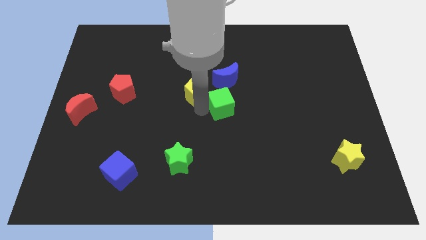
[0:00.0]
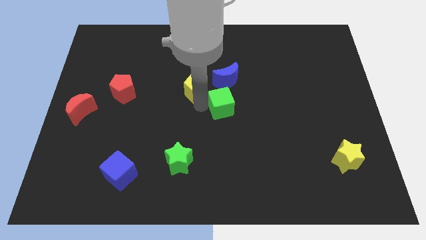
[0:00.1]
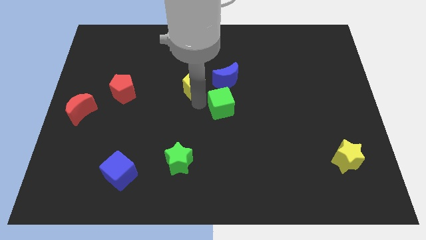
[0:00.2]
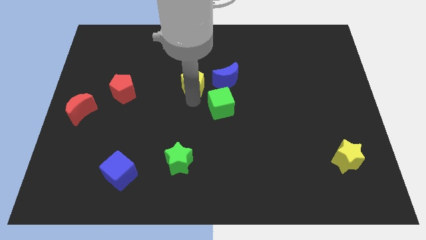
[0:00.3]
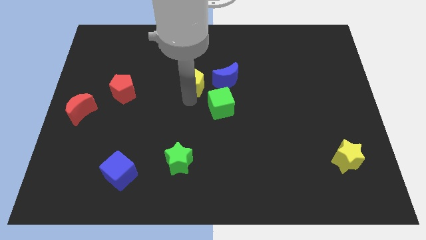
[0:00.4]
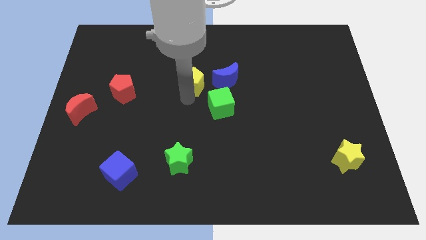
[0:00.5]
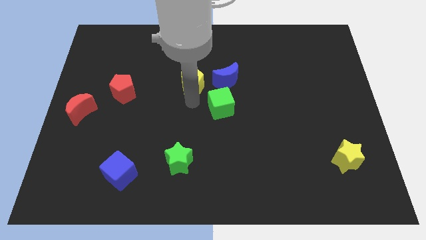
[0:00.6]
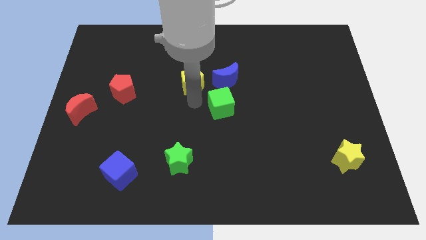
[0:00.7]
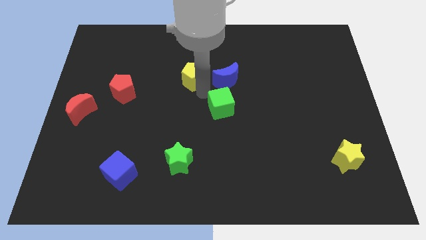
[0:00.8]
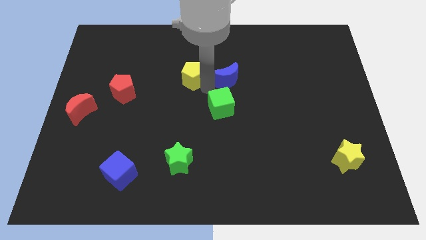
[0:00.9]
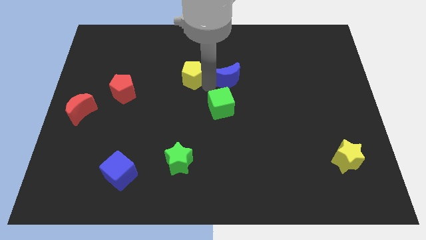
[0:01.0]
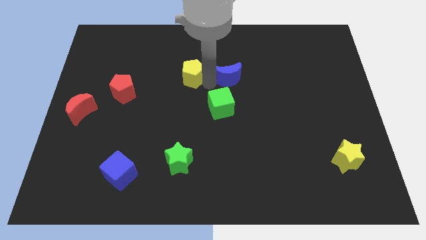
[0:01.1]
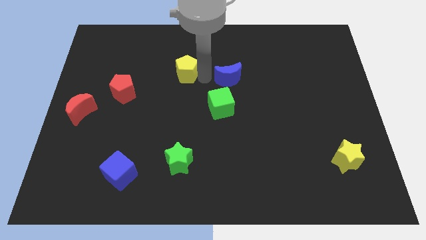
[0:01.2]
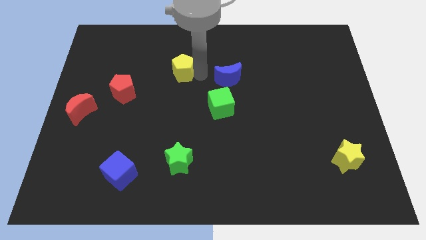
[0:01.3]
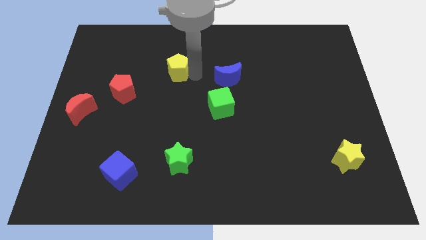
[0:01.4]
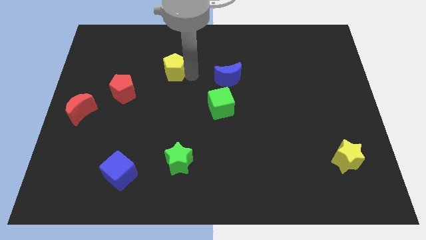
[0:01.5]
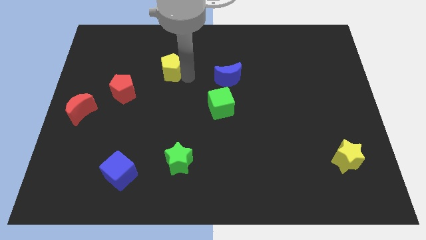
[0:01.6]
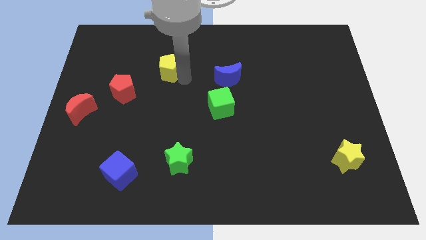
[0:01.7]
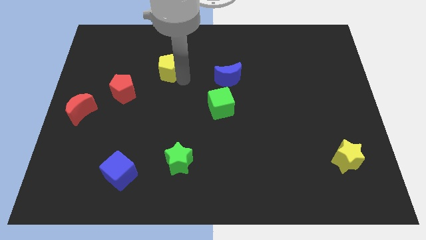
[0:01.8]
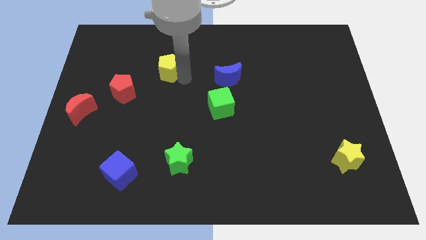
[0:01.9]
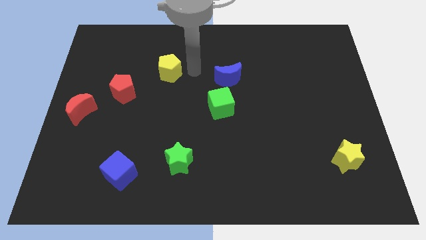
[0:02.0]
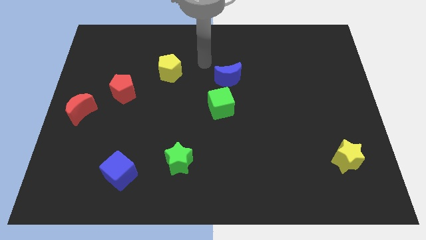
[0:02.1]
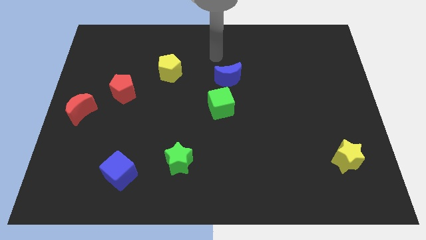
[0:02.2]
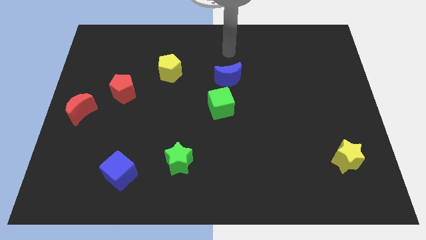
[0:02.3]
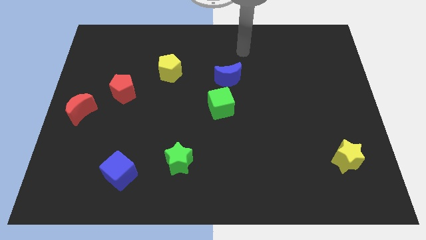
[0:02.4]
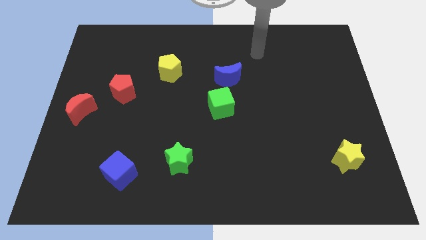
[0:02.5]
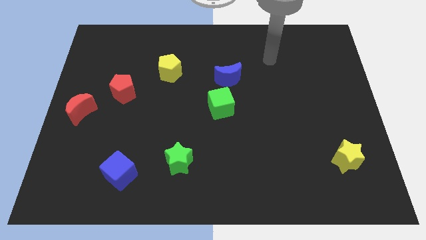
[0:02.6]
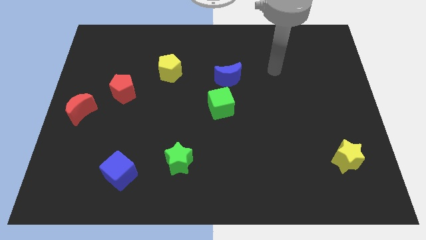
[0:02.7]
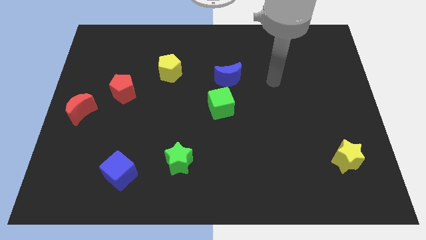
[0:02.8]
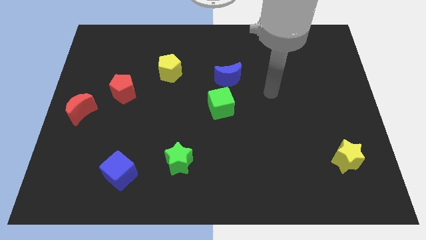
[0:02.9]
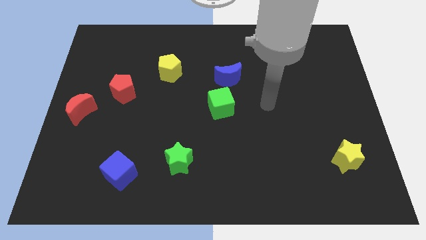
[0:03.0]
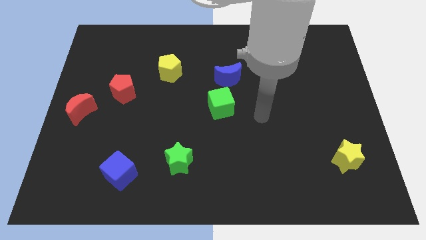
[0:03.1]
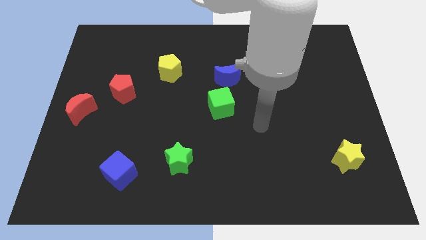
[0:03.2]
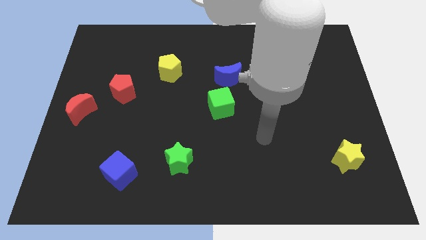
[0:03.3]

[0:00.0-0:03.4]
separate the yellow pentagon from the blue crescent

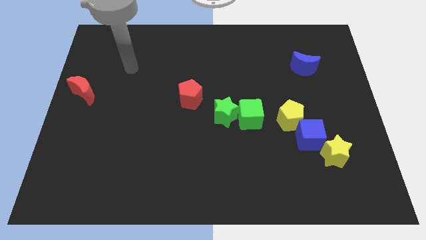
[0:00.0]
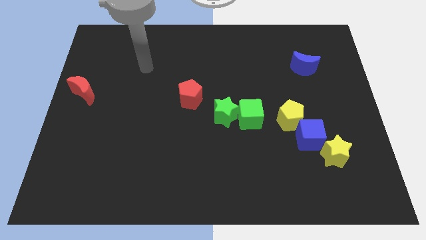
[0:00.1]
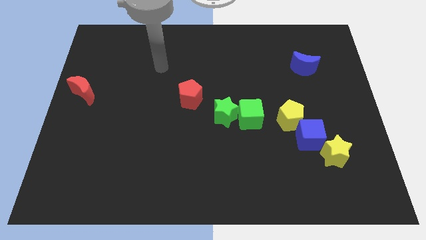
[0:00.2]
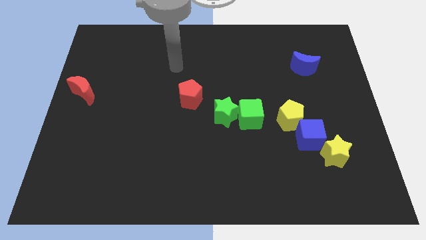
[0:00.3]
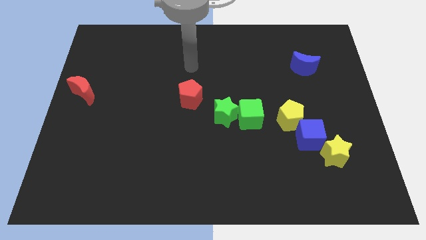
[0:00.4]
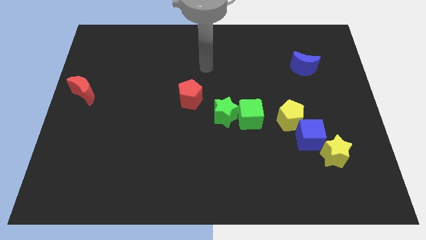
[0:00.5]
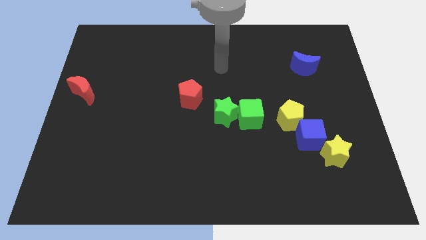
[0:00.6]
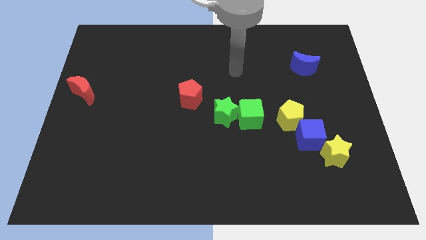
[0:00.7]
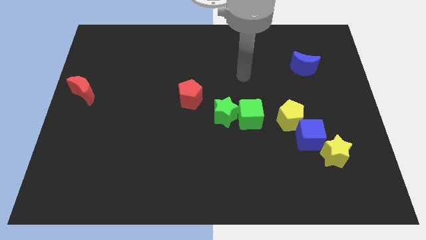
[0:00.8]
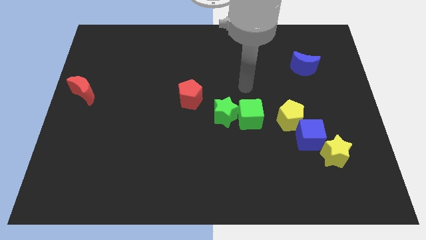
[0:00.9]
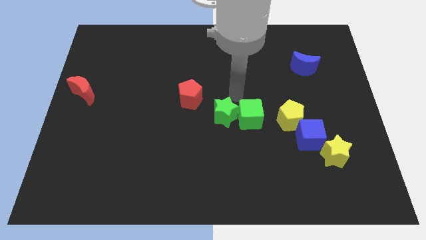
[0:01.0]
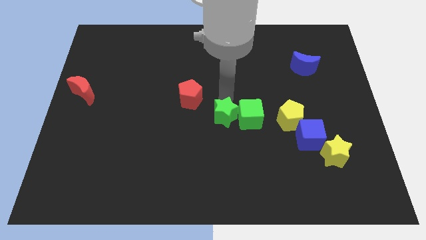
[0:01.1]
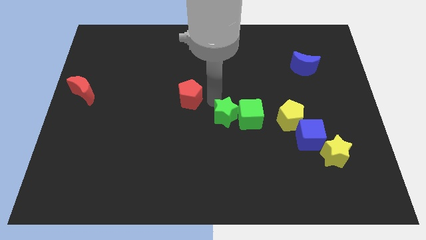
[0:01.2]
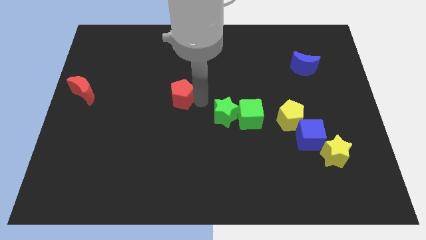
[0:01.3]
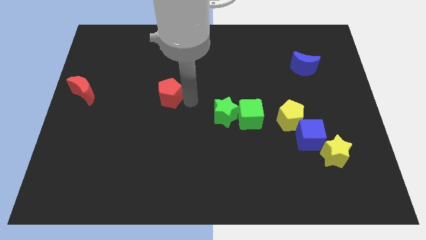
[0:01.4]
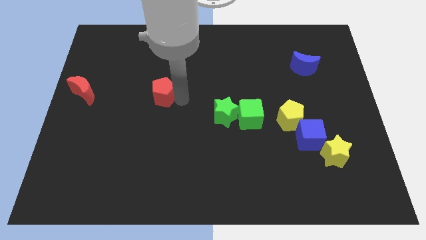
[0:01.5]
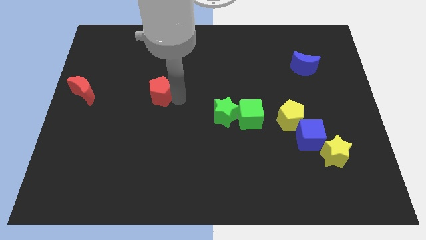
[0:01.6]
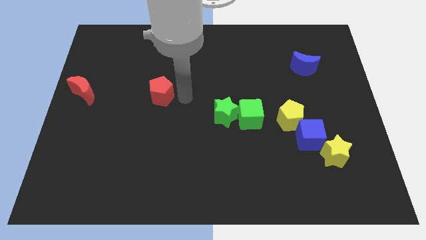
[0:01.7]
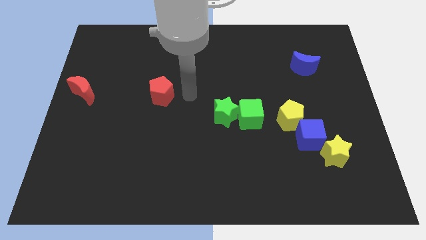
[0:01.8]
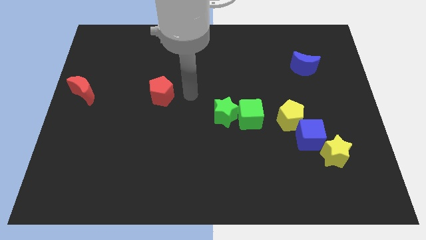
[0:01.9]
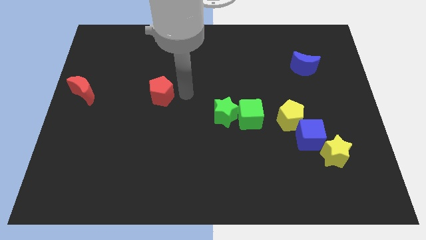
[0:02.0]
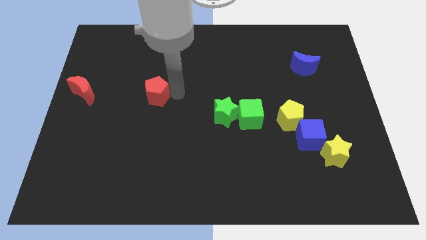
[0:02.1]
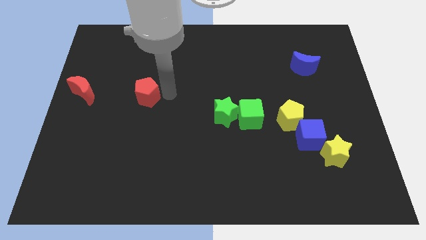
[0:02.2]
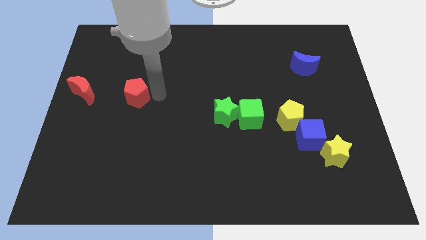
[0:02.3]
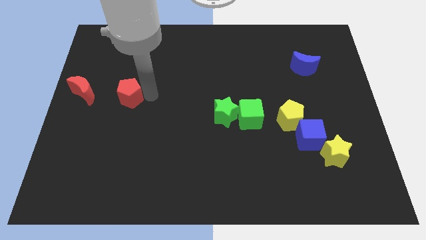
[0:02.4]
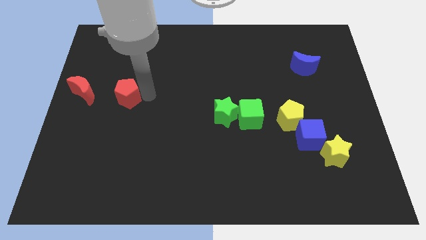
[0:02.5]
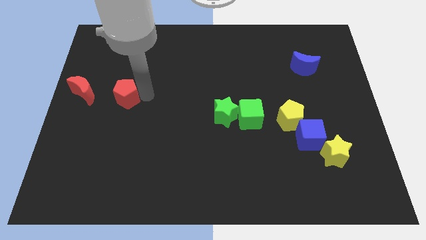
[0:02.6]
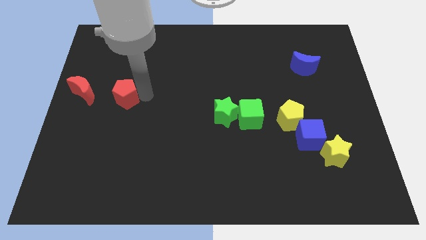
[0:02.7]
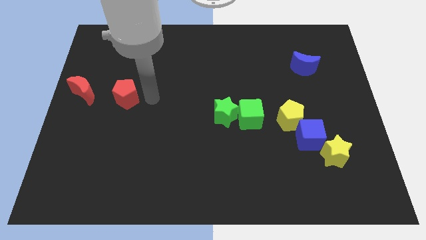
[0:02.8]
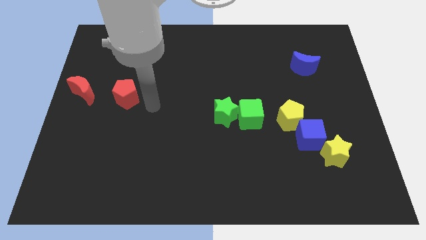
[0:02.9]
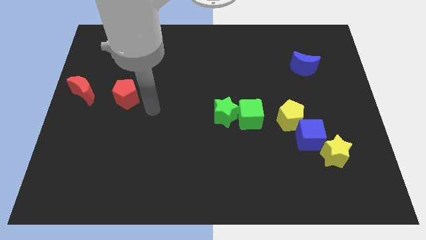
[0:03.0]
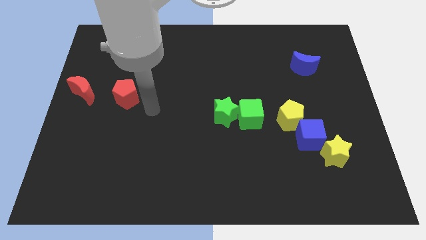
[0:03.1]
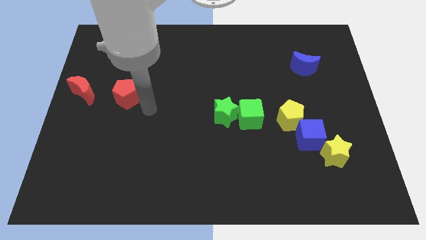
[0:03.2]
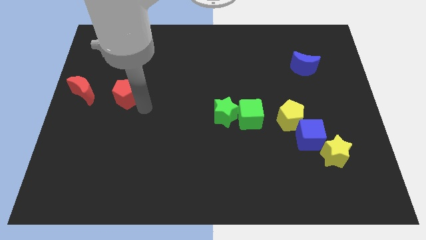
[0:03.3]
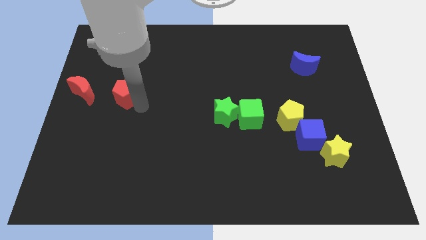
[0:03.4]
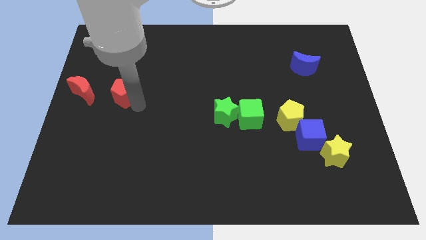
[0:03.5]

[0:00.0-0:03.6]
put the red pentagon to the right of the red crescent

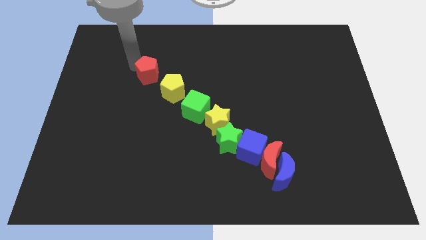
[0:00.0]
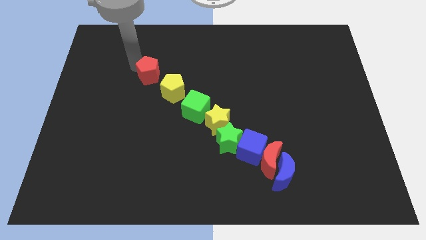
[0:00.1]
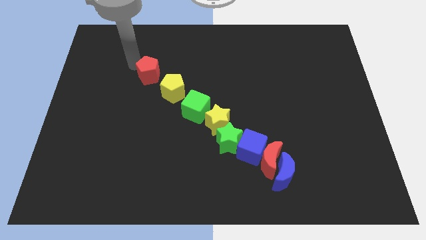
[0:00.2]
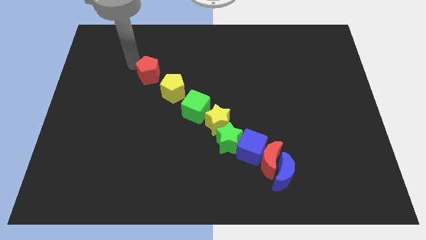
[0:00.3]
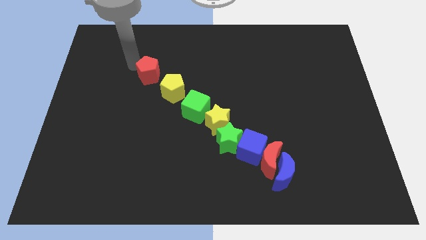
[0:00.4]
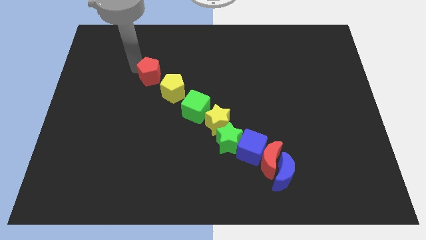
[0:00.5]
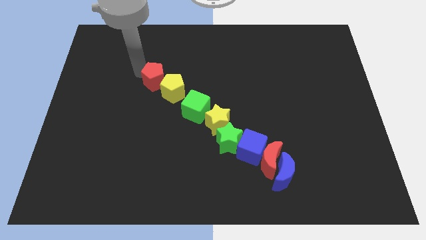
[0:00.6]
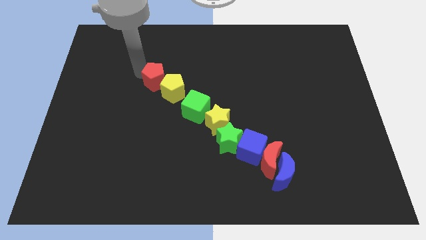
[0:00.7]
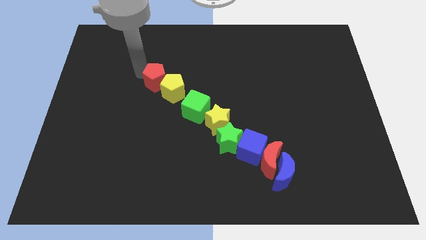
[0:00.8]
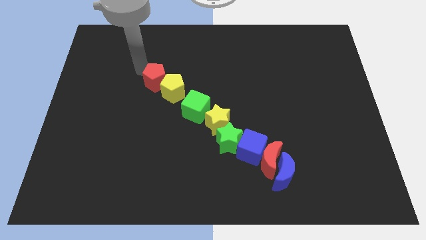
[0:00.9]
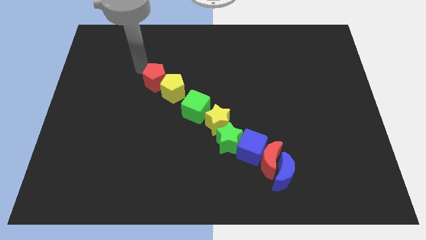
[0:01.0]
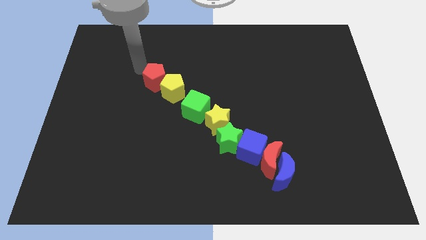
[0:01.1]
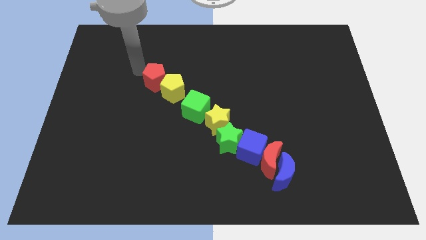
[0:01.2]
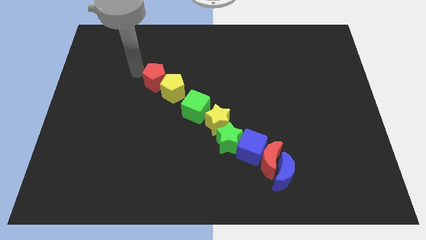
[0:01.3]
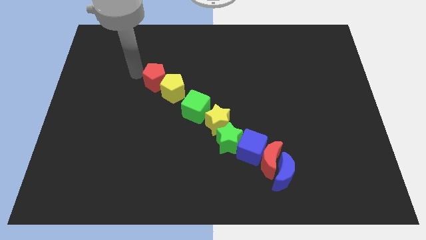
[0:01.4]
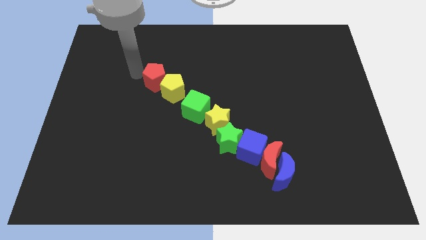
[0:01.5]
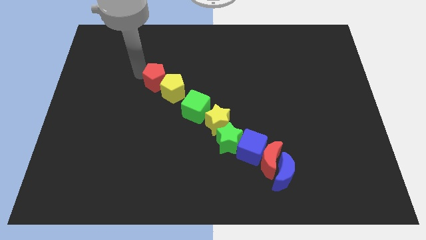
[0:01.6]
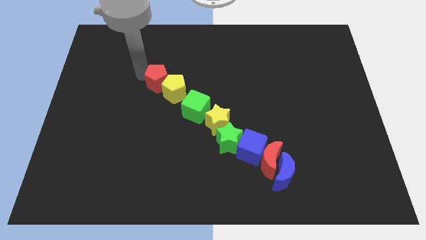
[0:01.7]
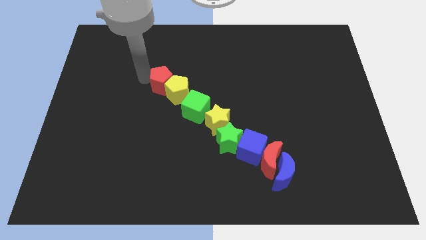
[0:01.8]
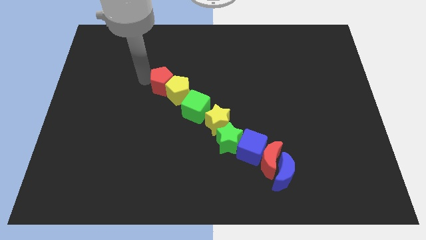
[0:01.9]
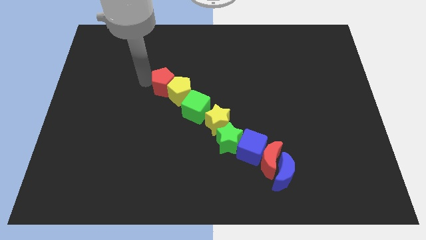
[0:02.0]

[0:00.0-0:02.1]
place red pentagon to the top of the yellow pentagon
